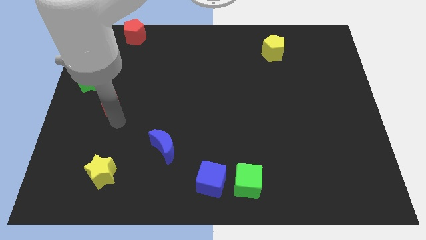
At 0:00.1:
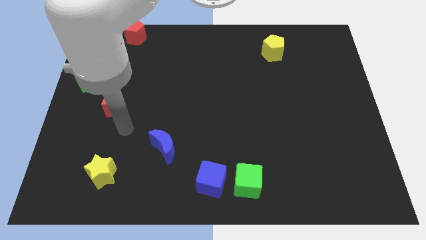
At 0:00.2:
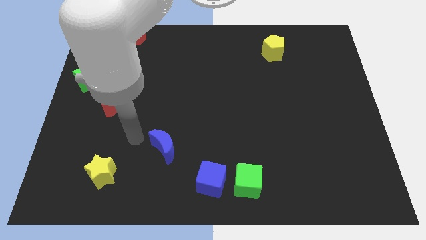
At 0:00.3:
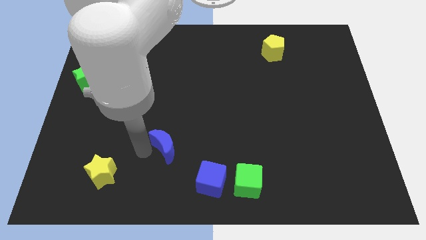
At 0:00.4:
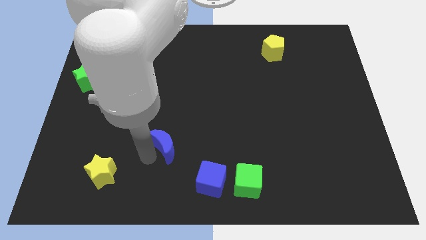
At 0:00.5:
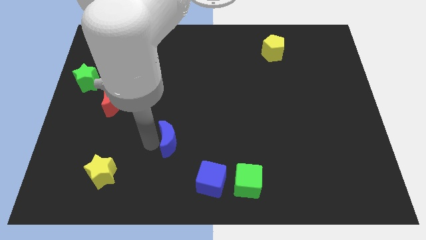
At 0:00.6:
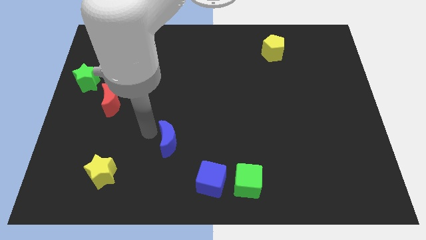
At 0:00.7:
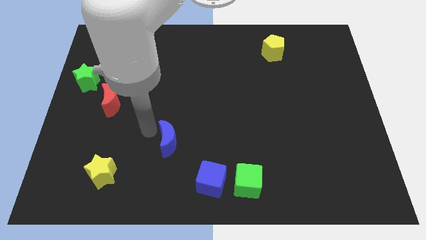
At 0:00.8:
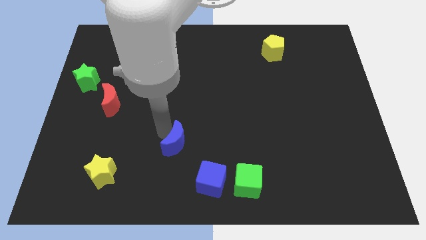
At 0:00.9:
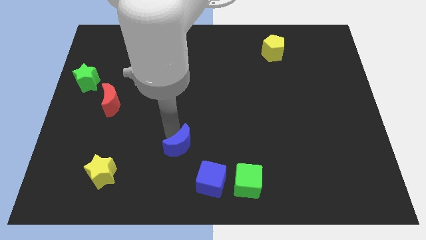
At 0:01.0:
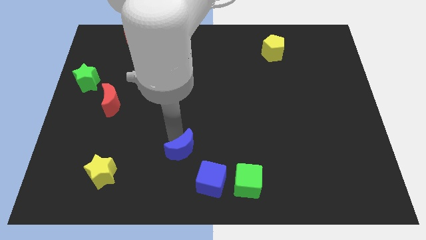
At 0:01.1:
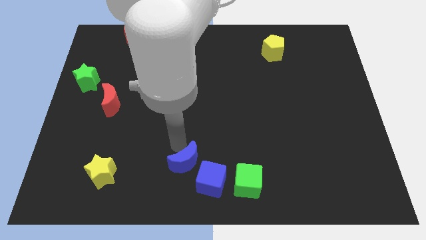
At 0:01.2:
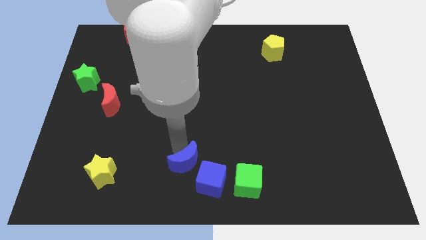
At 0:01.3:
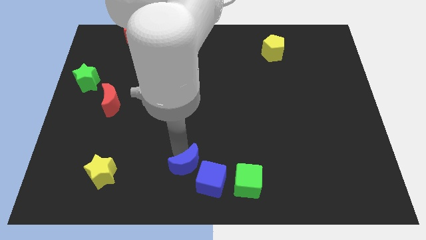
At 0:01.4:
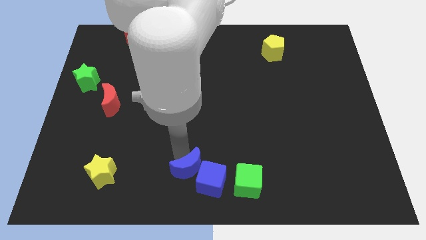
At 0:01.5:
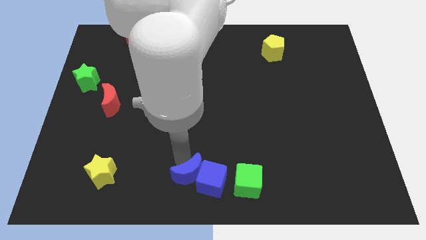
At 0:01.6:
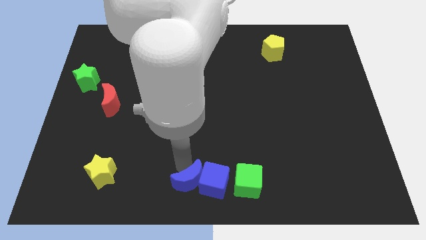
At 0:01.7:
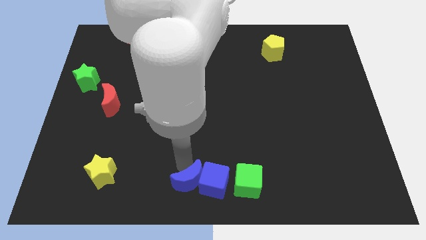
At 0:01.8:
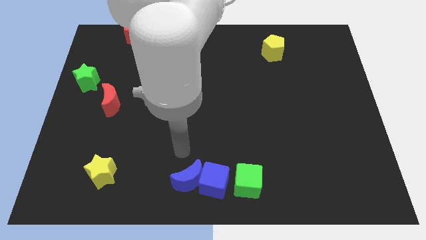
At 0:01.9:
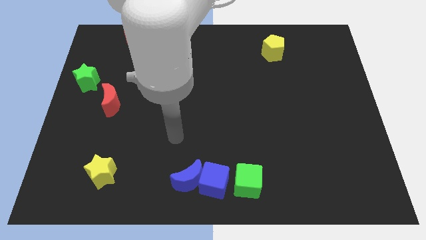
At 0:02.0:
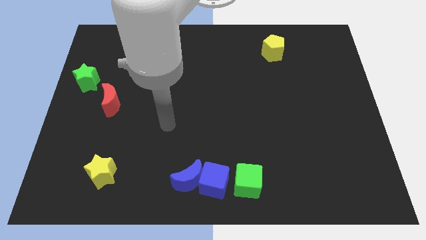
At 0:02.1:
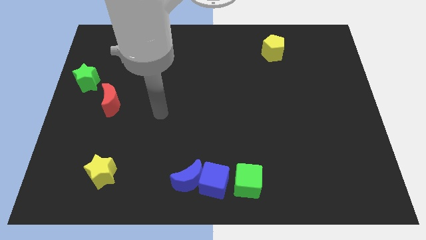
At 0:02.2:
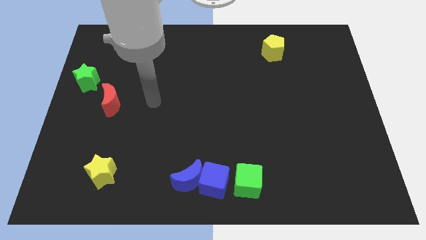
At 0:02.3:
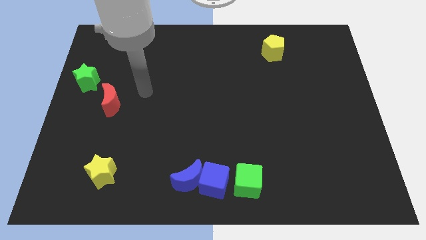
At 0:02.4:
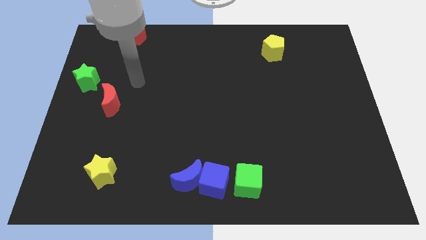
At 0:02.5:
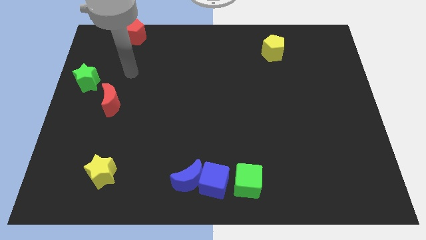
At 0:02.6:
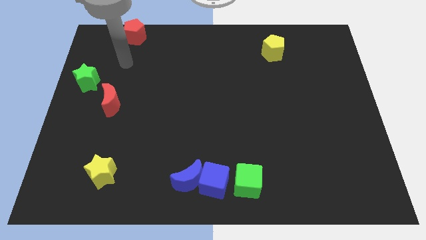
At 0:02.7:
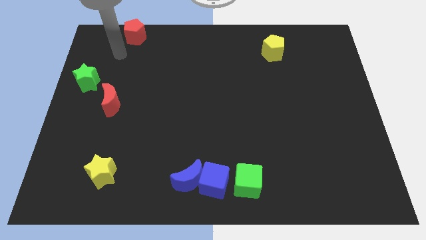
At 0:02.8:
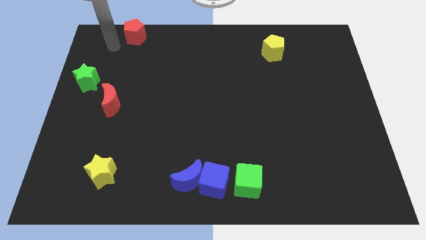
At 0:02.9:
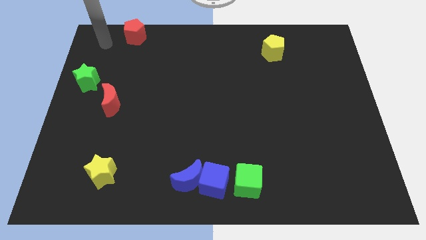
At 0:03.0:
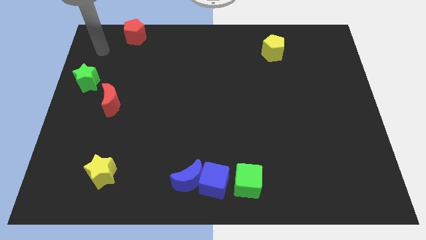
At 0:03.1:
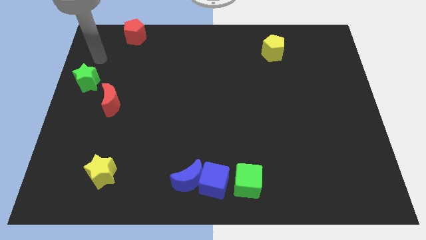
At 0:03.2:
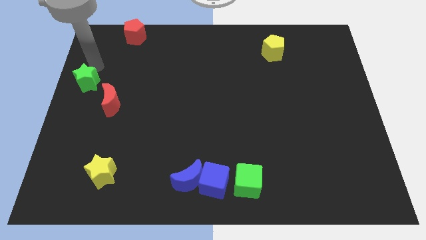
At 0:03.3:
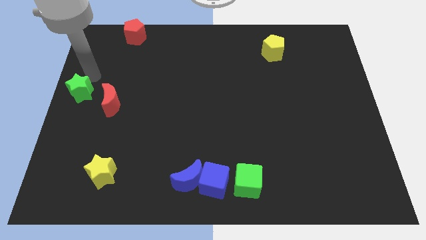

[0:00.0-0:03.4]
place the blue moon parallel left to the blue cube

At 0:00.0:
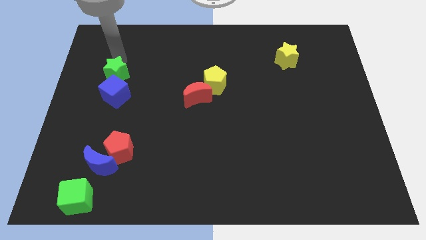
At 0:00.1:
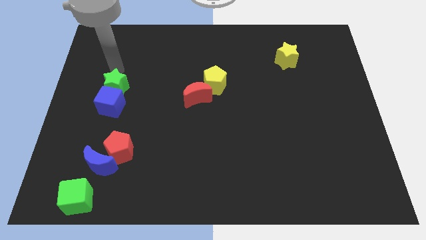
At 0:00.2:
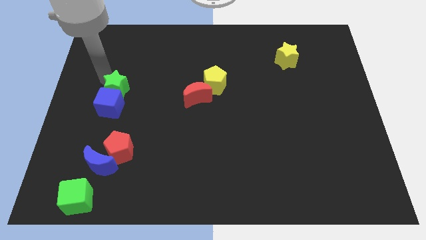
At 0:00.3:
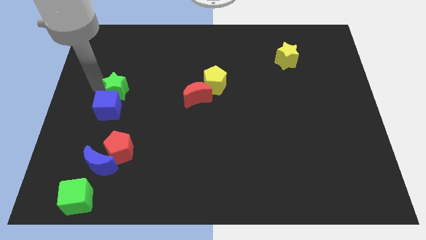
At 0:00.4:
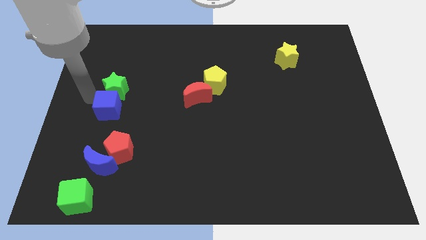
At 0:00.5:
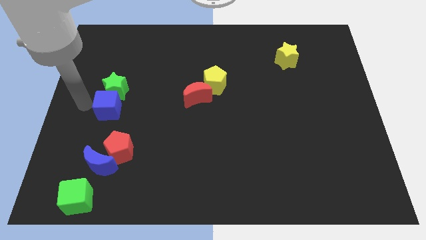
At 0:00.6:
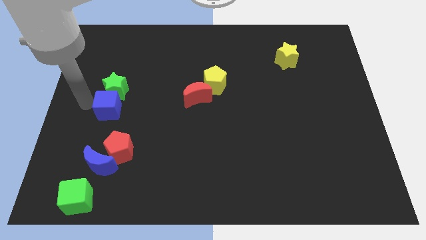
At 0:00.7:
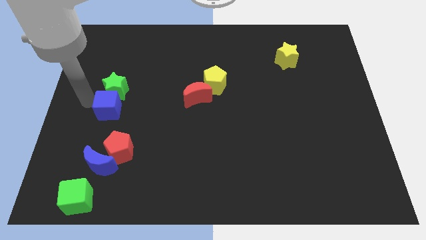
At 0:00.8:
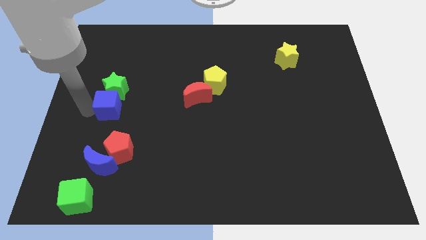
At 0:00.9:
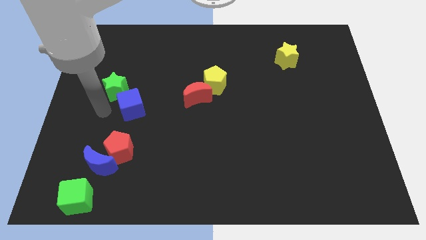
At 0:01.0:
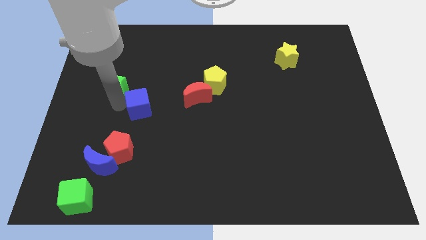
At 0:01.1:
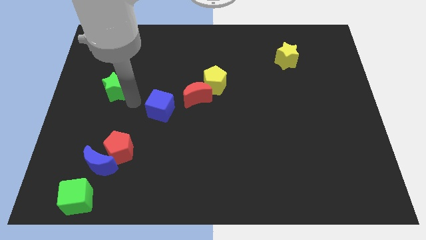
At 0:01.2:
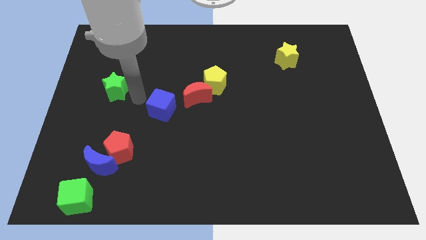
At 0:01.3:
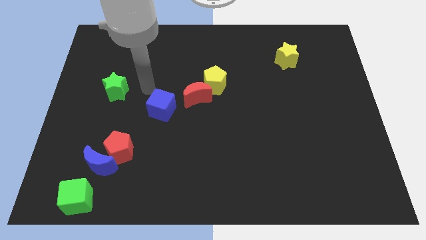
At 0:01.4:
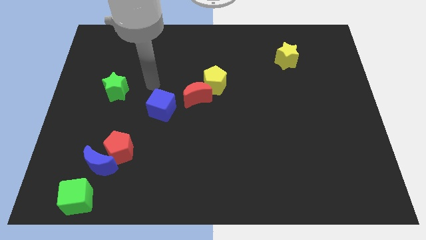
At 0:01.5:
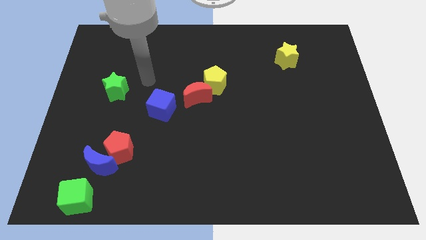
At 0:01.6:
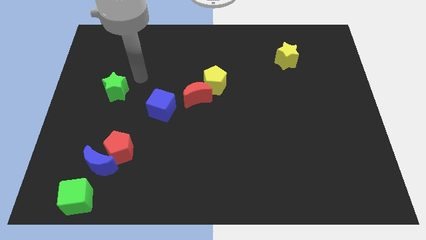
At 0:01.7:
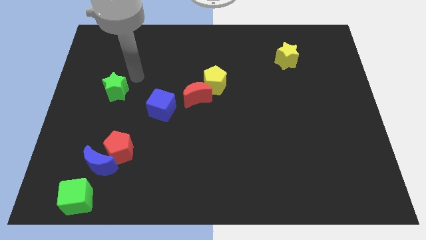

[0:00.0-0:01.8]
separate the blue cube from green star

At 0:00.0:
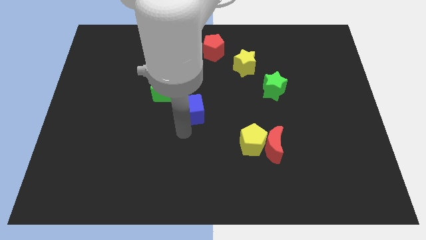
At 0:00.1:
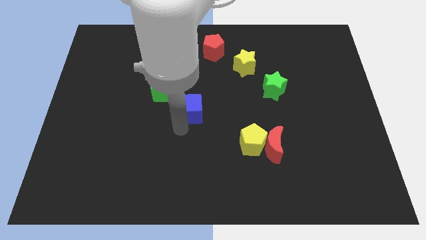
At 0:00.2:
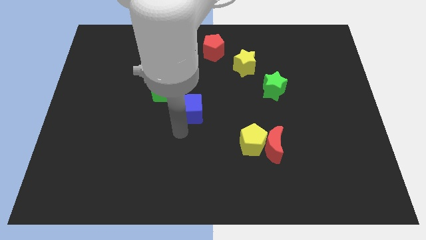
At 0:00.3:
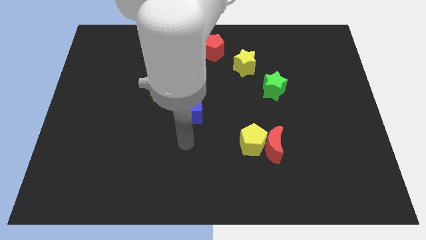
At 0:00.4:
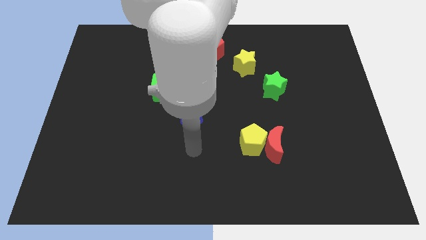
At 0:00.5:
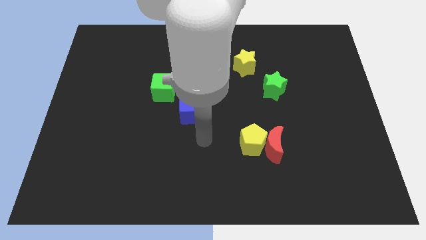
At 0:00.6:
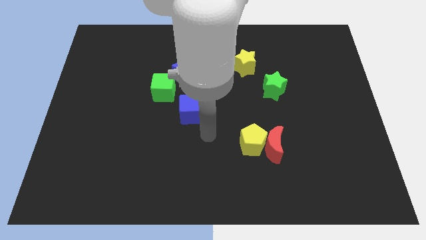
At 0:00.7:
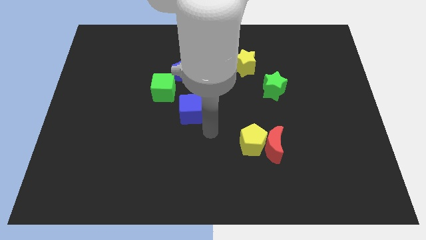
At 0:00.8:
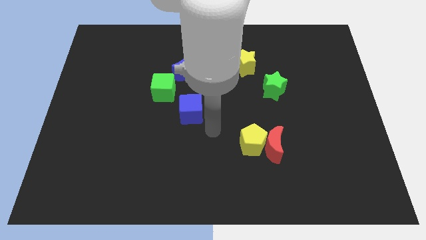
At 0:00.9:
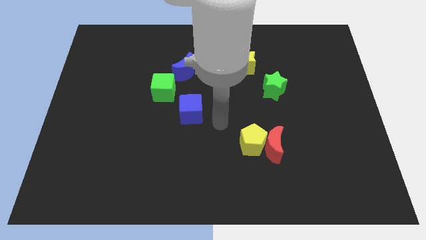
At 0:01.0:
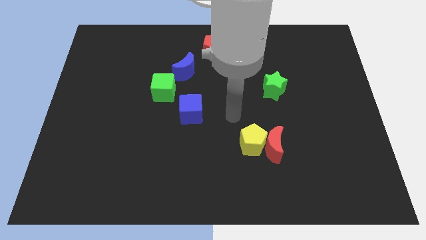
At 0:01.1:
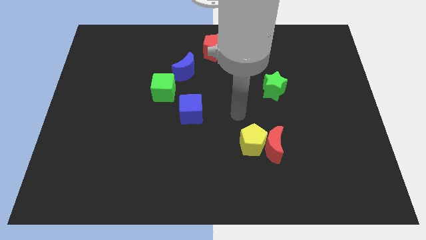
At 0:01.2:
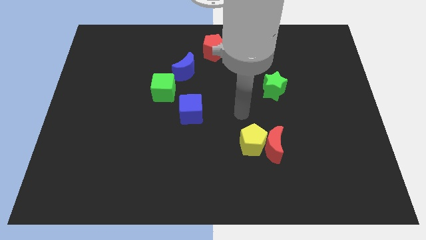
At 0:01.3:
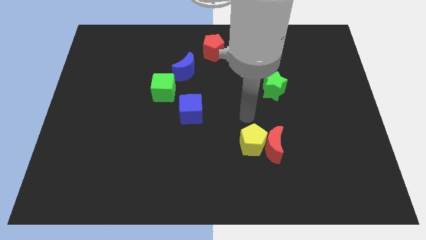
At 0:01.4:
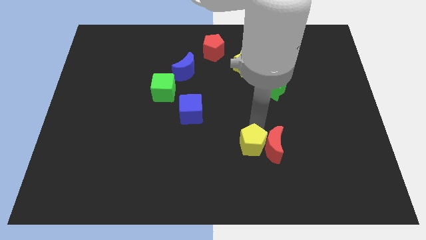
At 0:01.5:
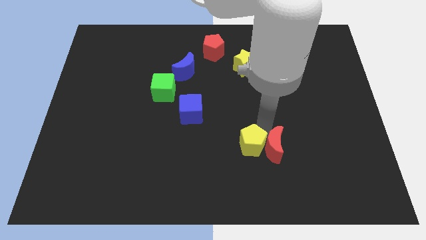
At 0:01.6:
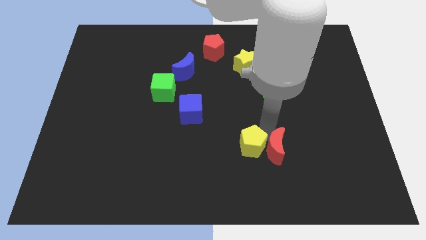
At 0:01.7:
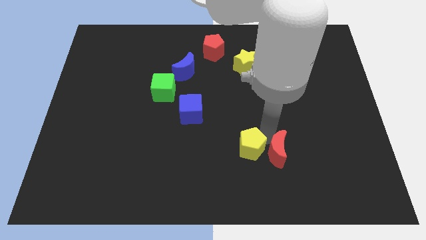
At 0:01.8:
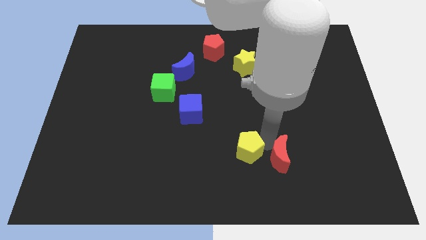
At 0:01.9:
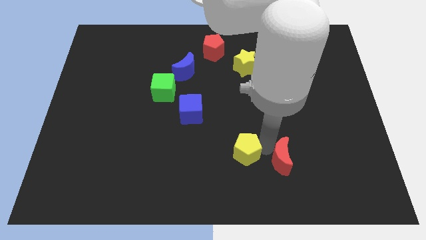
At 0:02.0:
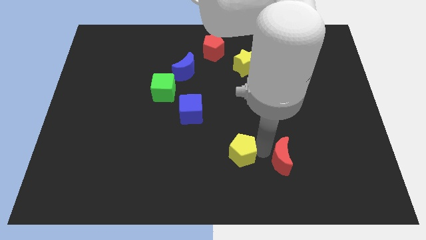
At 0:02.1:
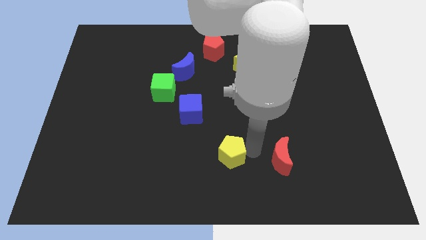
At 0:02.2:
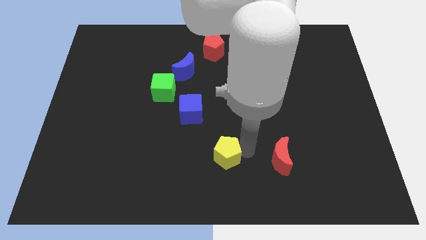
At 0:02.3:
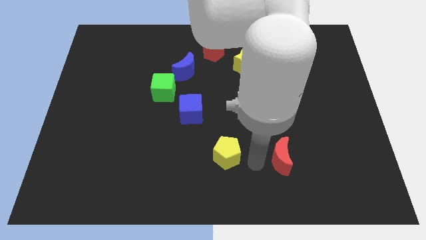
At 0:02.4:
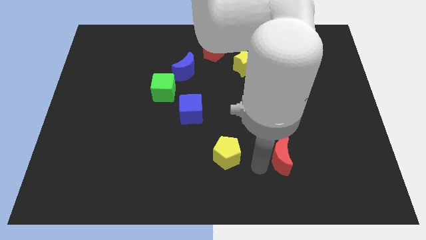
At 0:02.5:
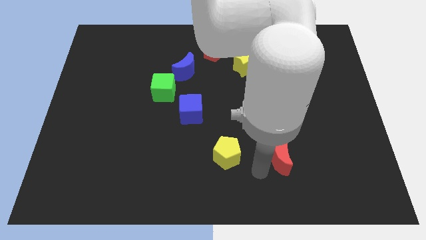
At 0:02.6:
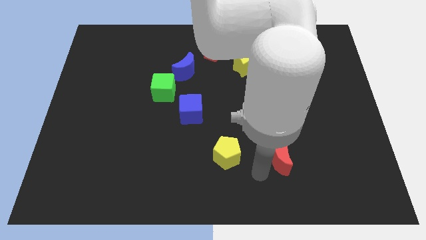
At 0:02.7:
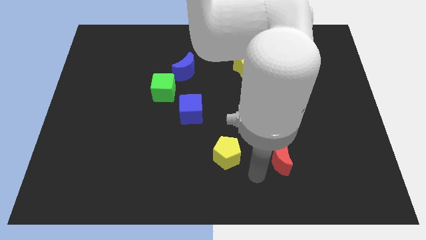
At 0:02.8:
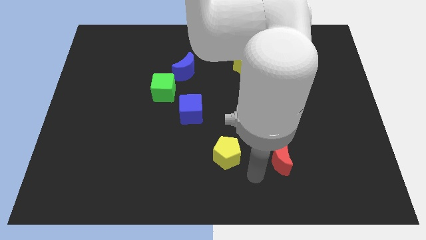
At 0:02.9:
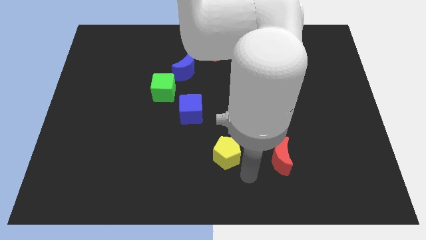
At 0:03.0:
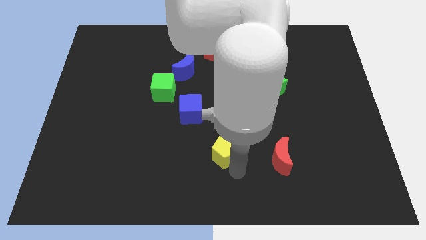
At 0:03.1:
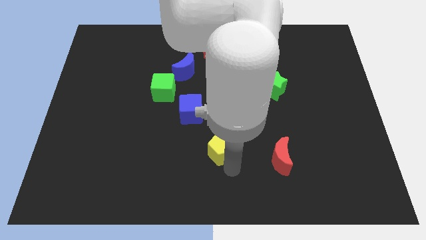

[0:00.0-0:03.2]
separate the yellow pentagon from the red moon

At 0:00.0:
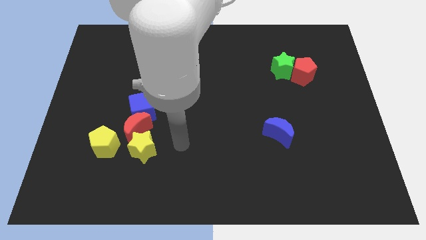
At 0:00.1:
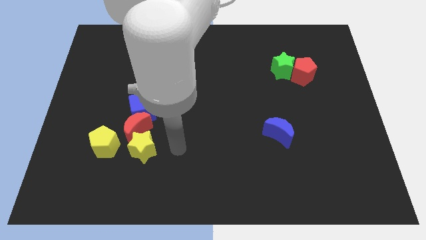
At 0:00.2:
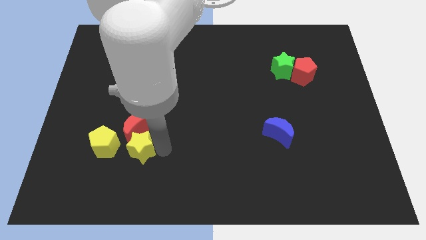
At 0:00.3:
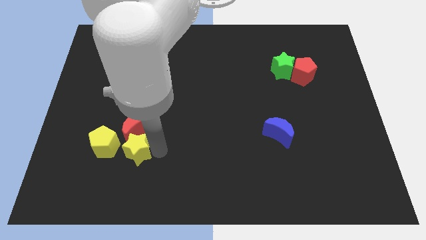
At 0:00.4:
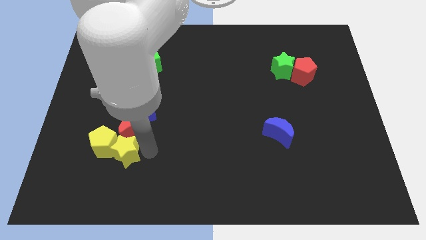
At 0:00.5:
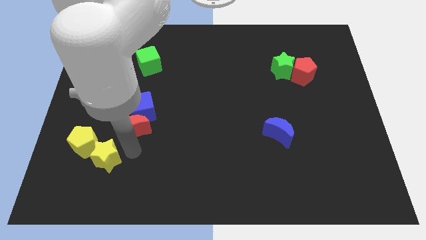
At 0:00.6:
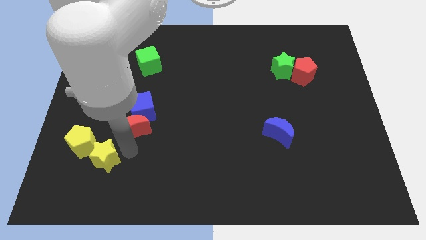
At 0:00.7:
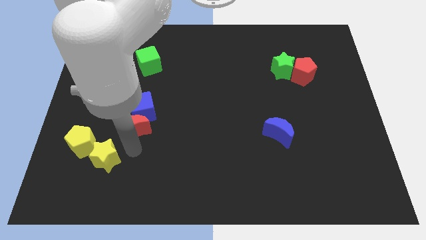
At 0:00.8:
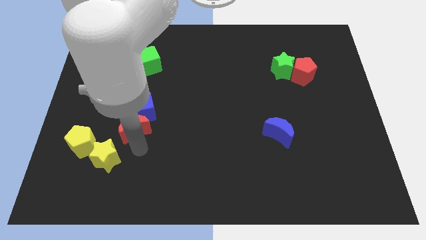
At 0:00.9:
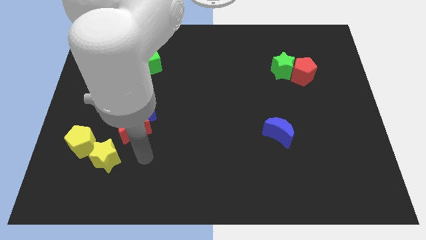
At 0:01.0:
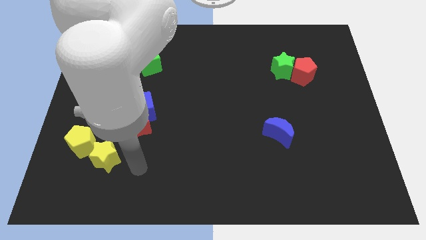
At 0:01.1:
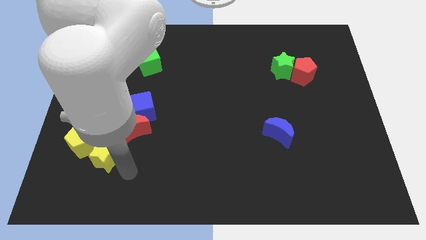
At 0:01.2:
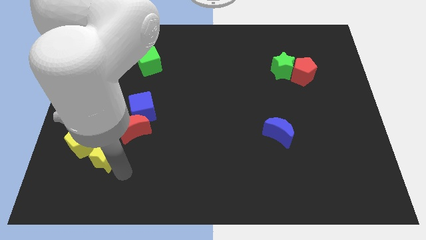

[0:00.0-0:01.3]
hit yellow pentagon with the yellow star
